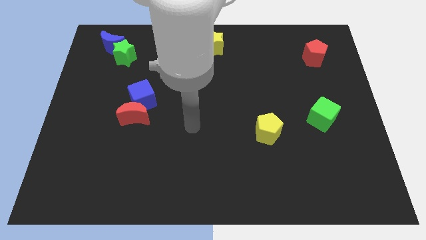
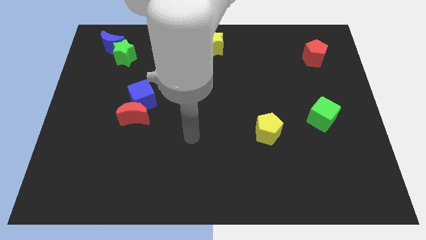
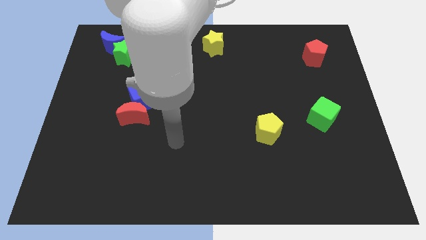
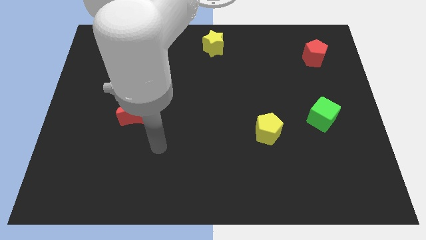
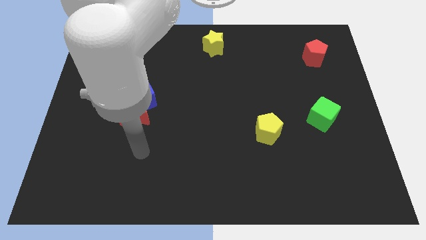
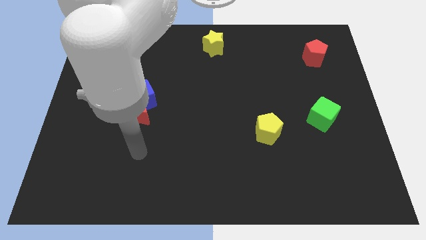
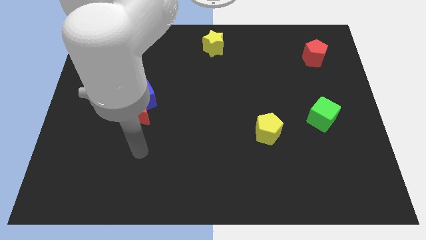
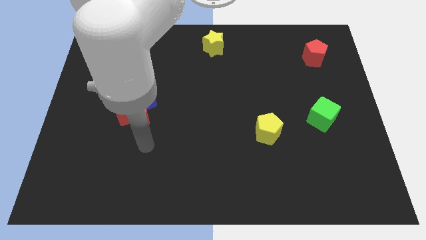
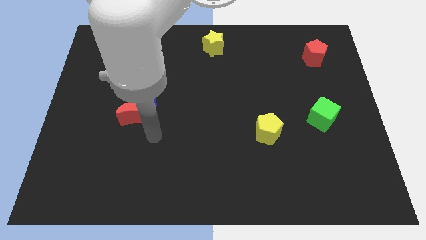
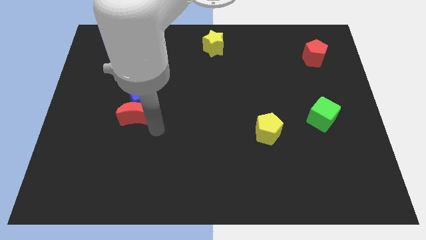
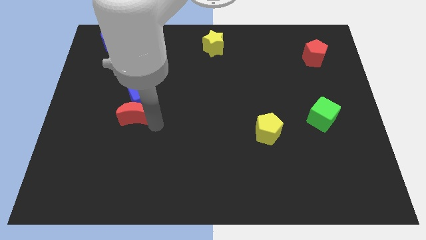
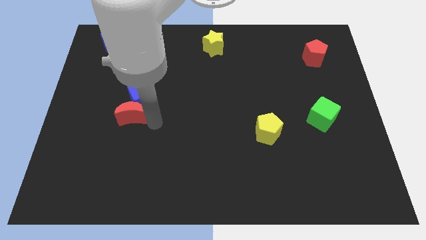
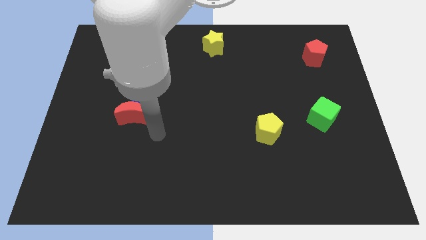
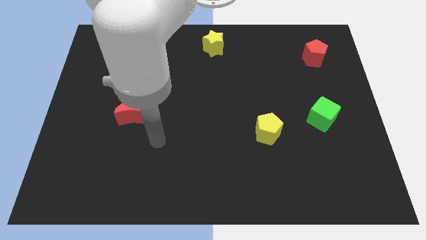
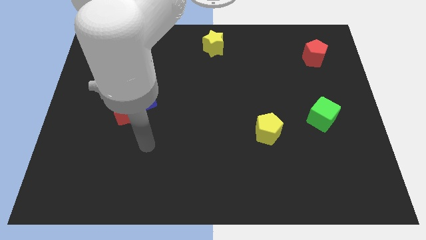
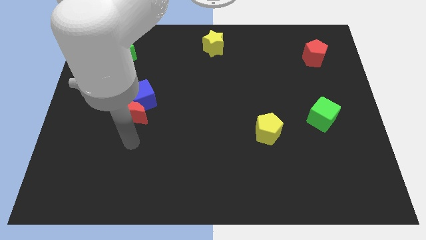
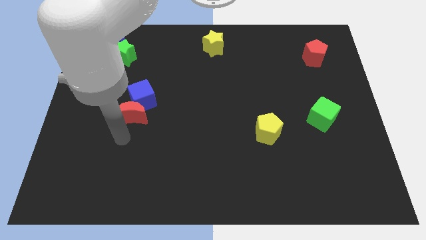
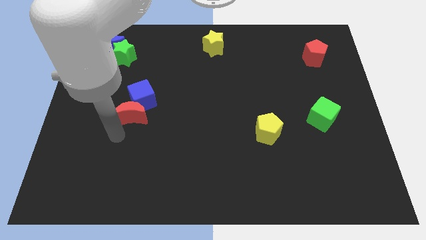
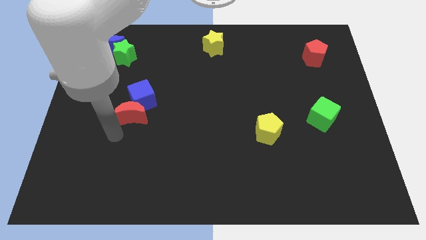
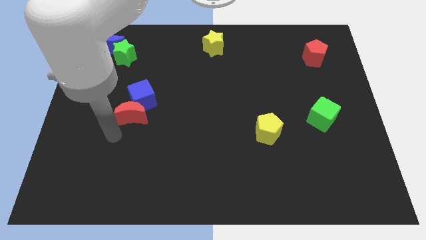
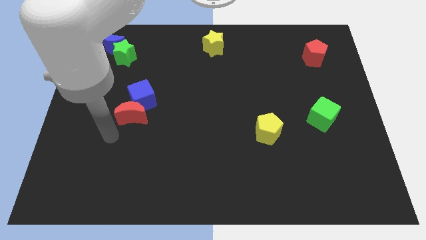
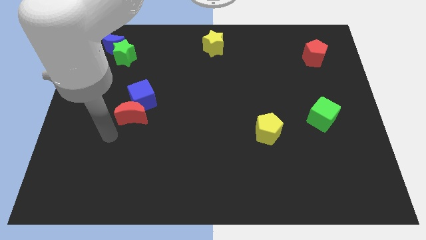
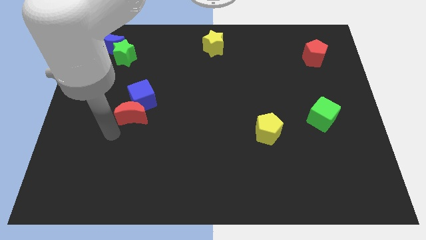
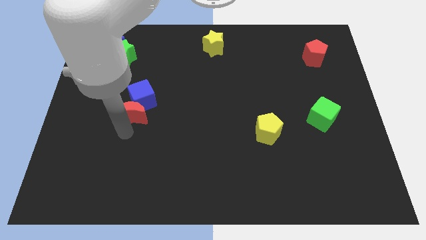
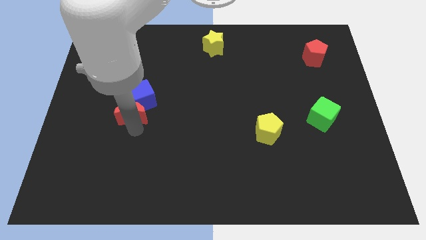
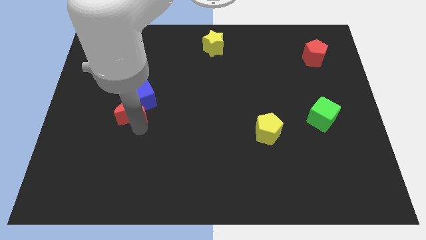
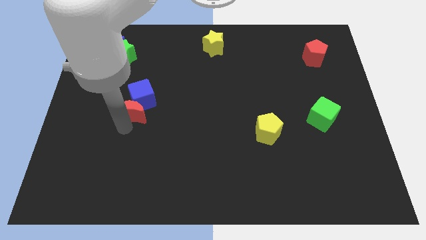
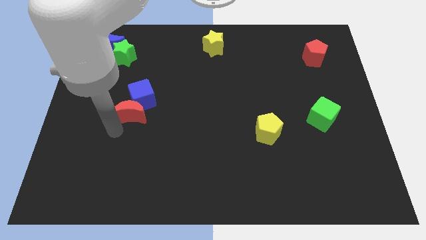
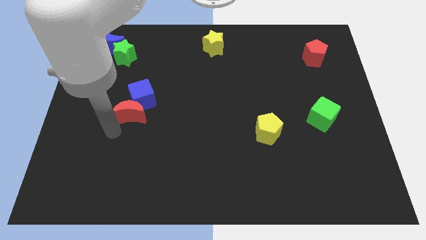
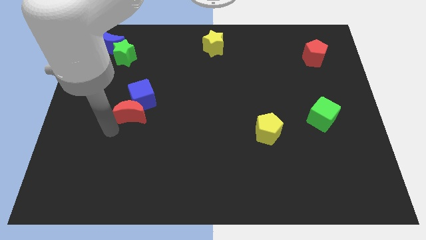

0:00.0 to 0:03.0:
move your arm to the bottom of red moon

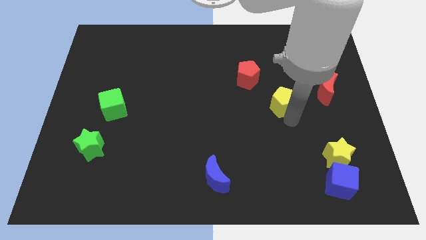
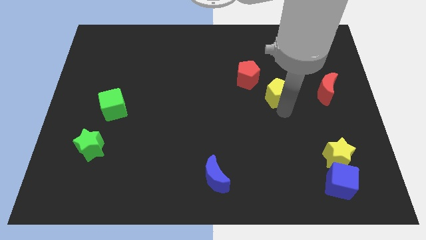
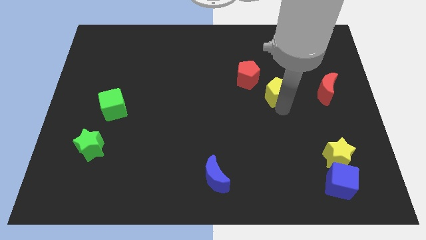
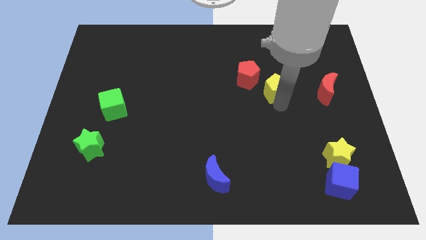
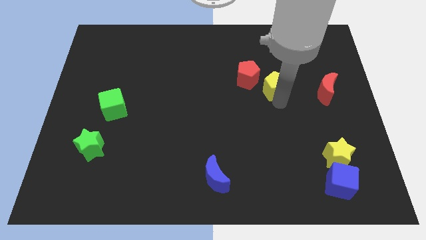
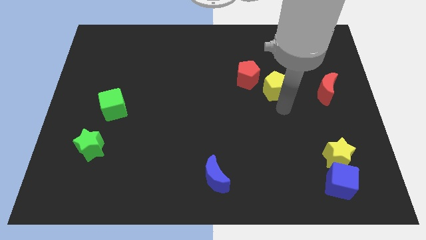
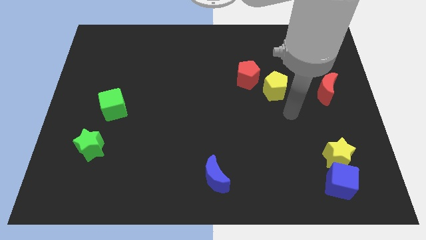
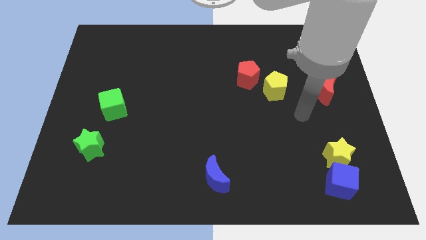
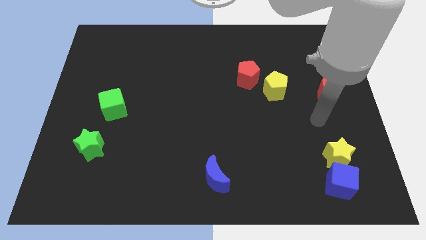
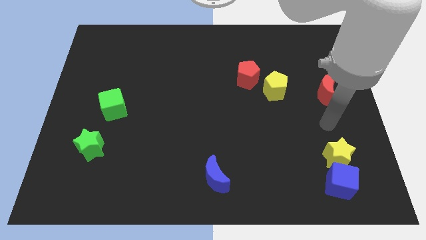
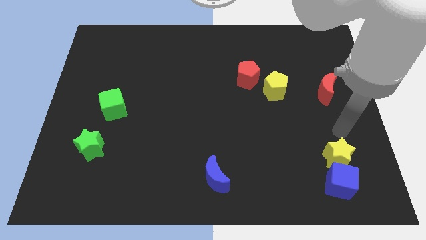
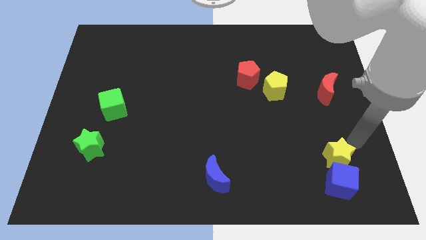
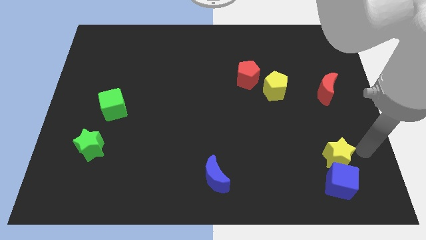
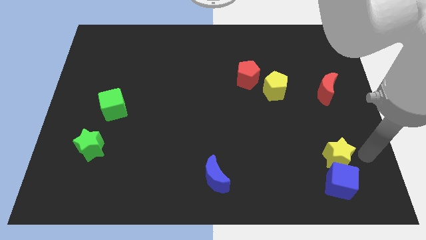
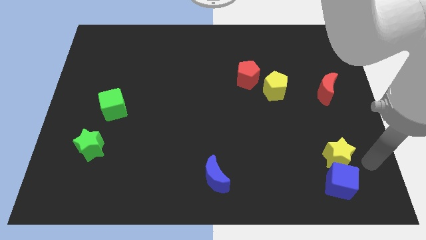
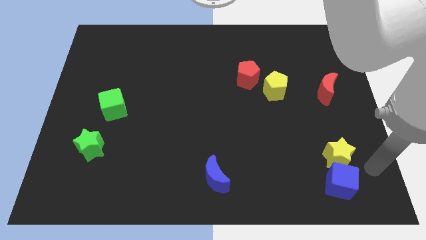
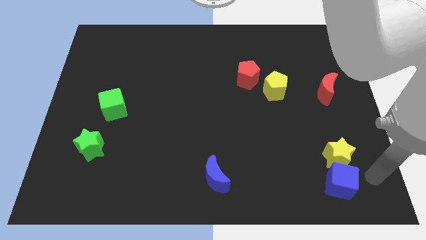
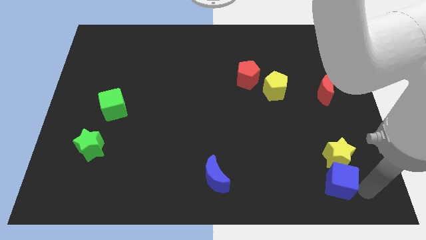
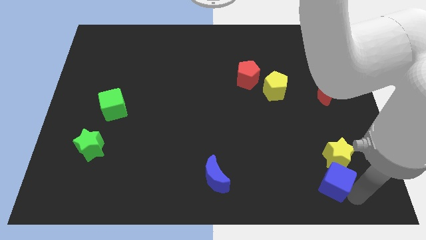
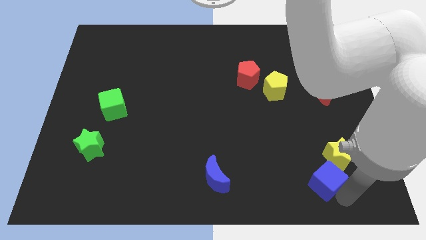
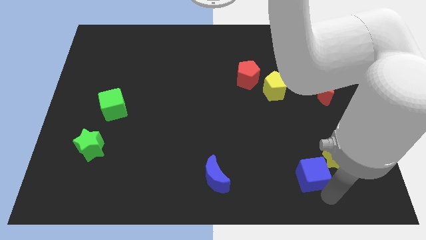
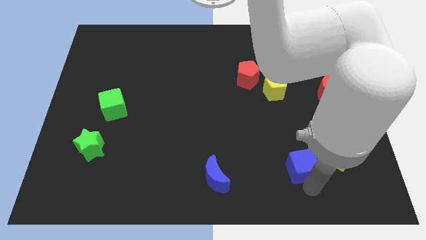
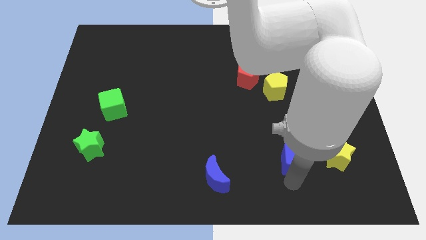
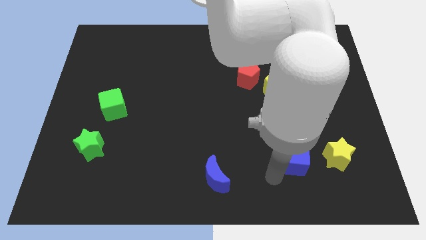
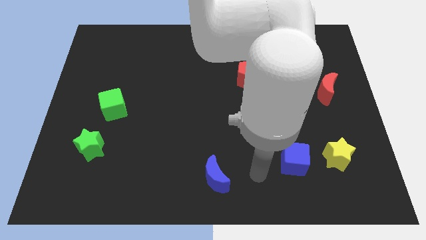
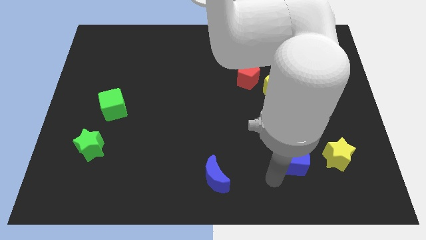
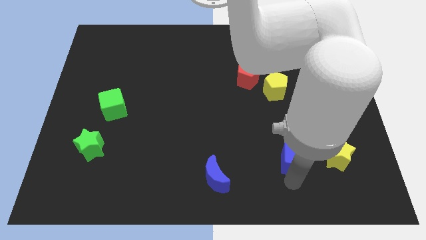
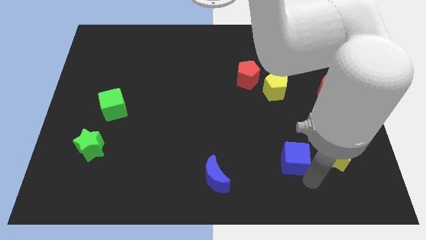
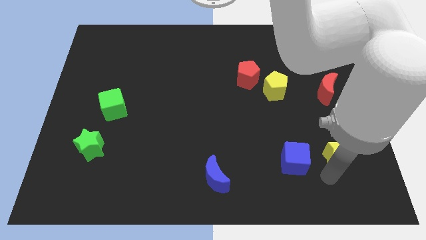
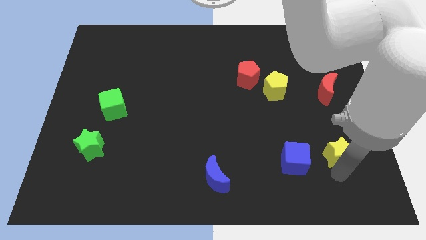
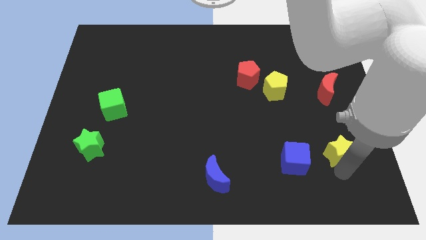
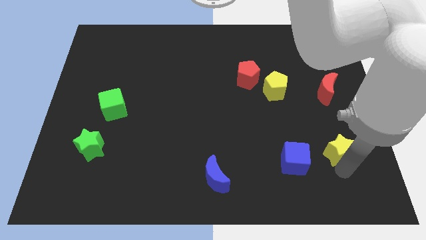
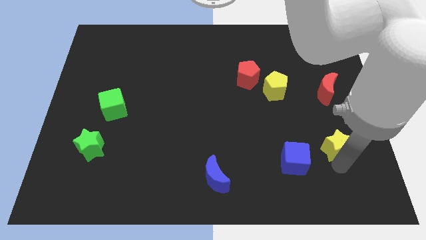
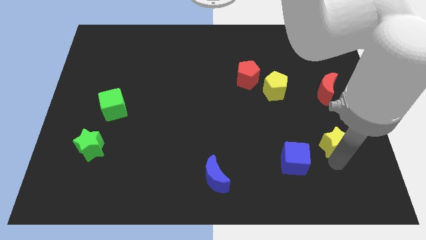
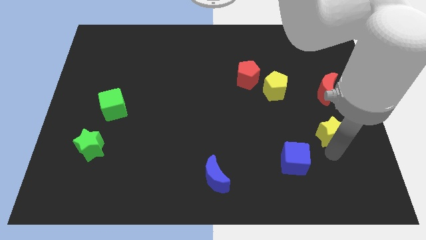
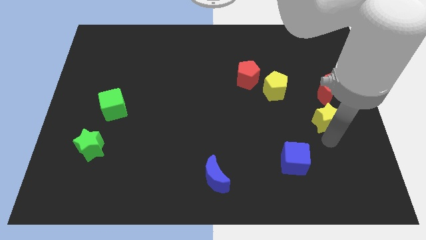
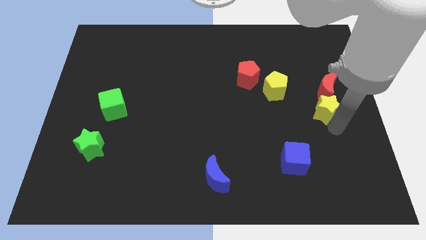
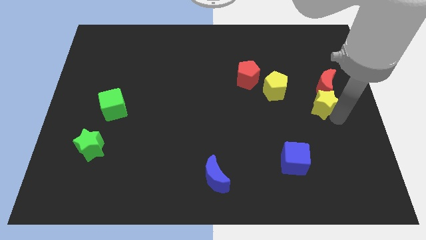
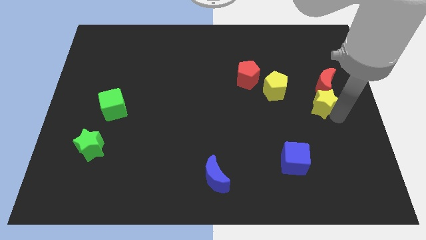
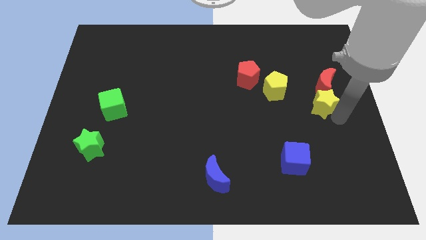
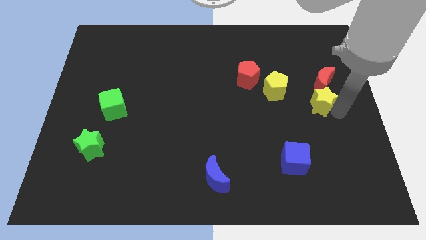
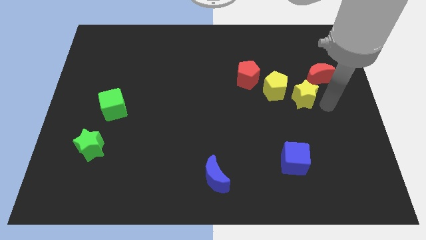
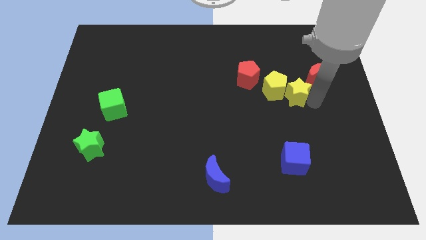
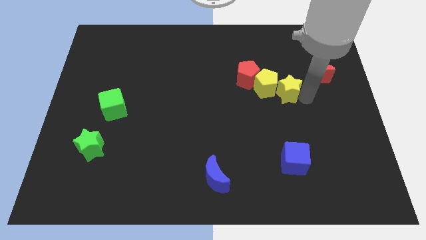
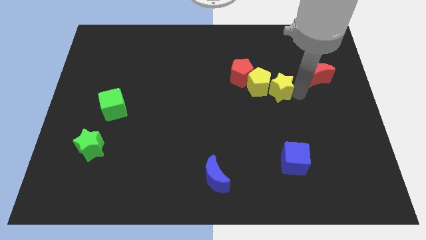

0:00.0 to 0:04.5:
place the yellow star to the right side of yellow pentagon

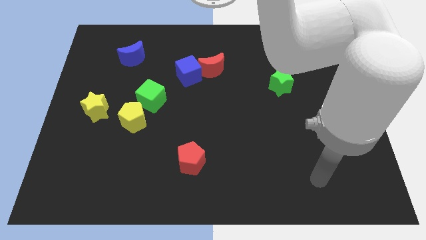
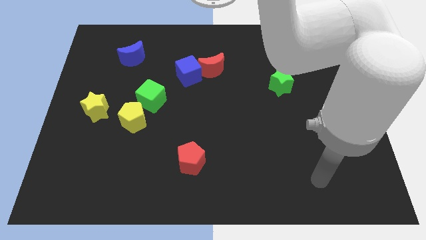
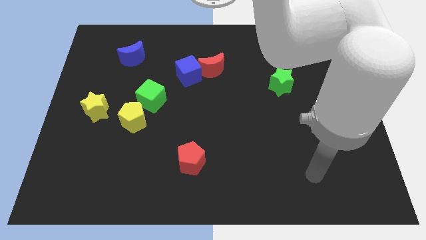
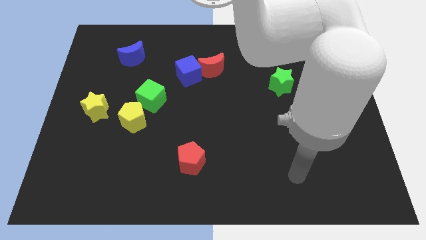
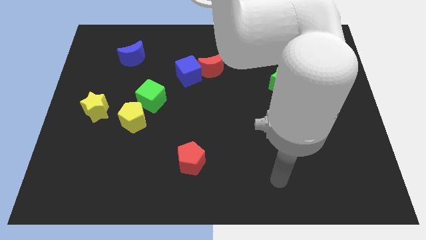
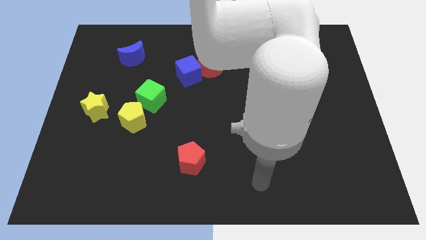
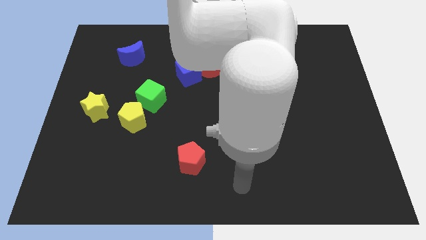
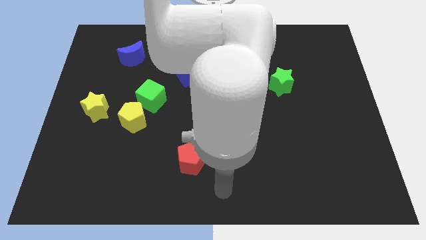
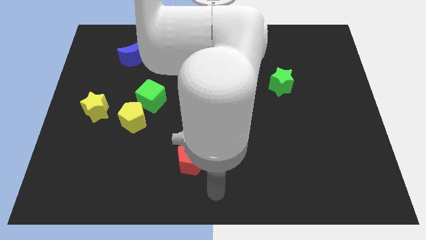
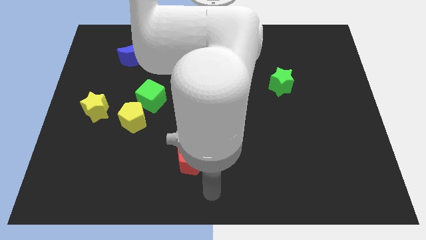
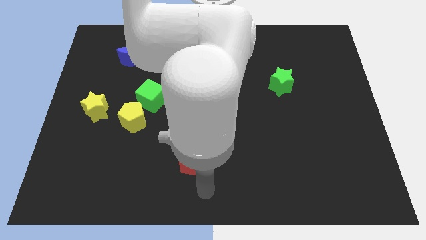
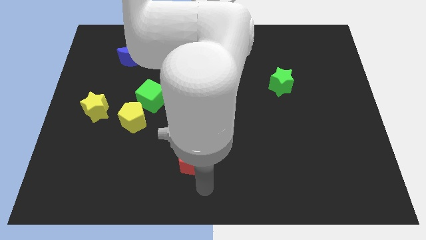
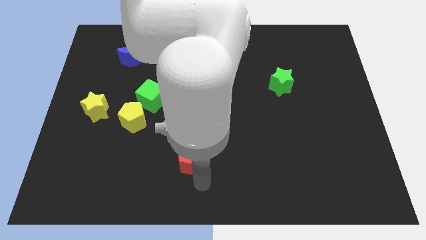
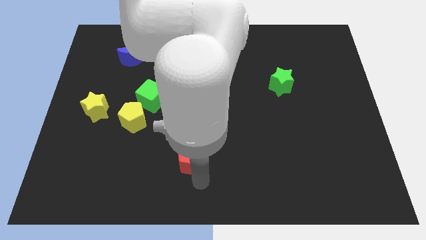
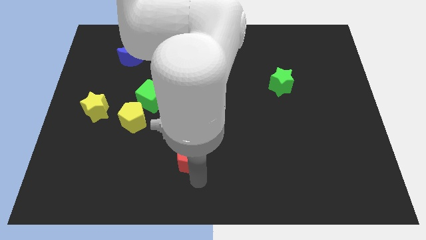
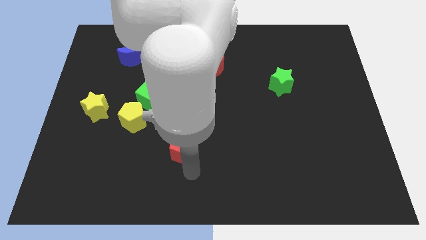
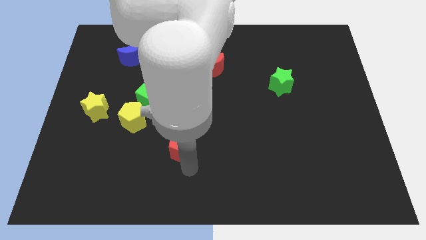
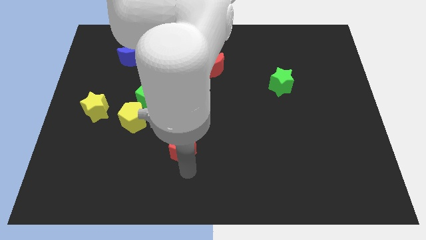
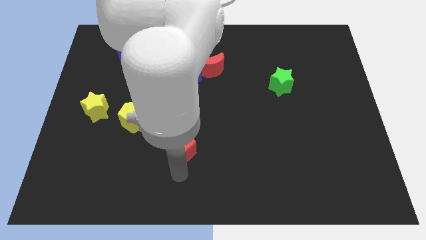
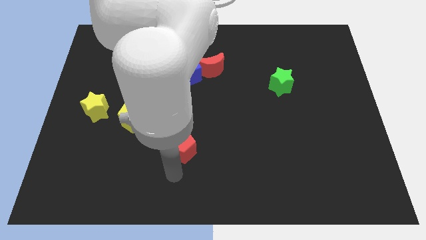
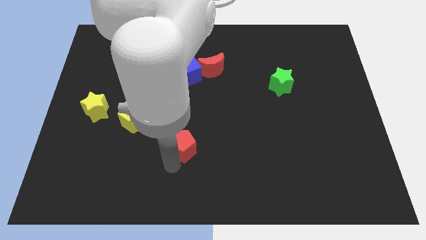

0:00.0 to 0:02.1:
move the red pentagon towards the center
